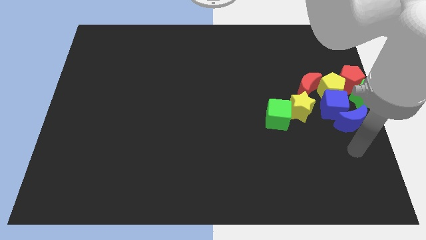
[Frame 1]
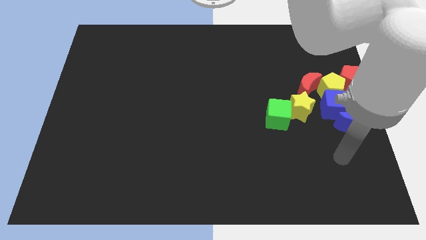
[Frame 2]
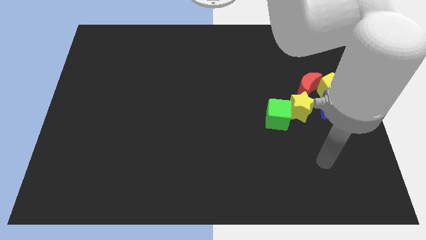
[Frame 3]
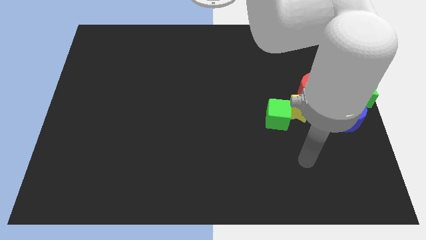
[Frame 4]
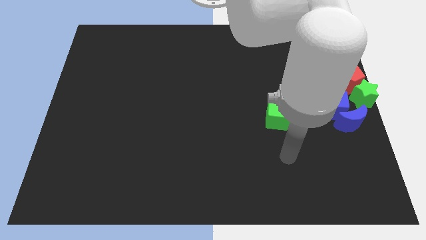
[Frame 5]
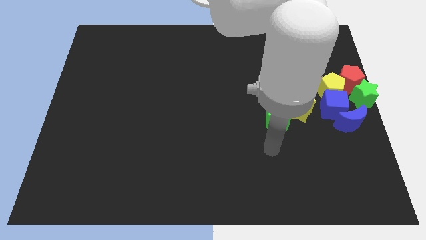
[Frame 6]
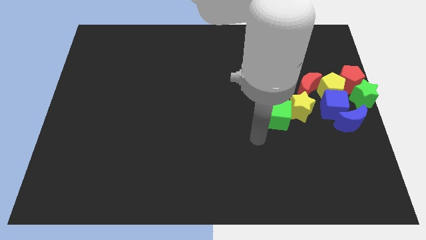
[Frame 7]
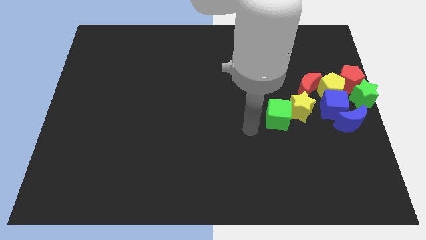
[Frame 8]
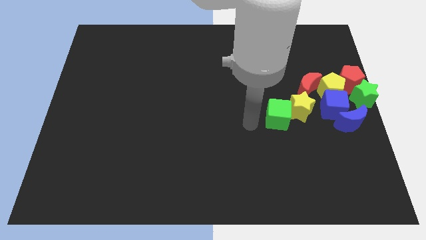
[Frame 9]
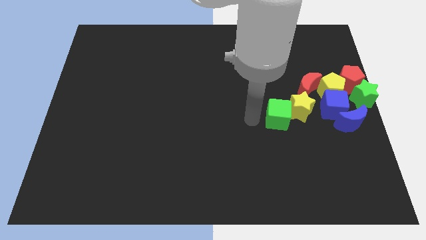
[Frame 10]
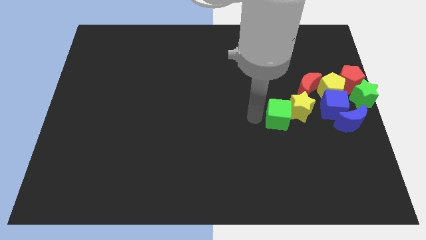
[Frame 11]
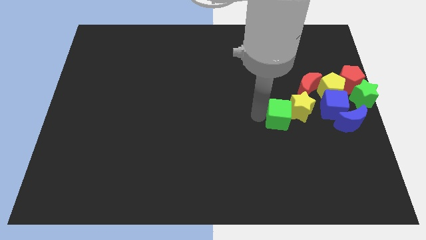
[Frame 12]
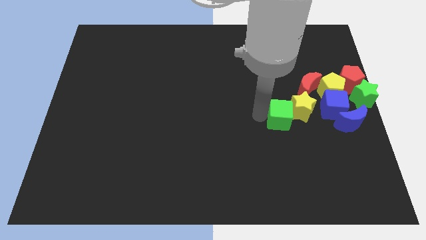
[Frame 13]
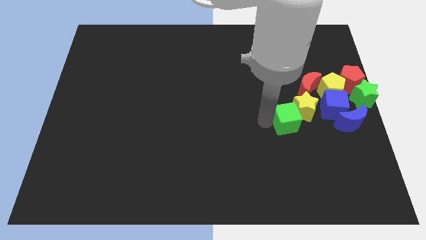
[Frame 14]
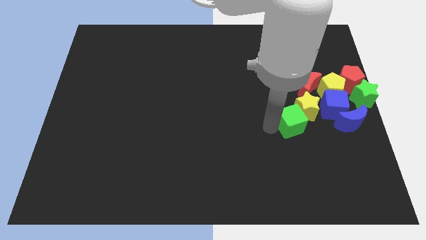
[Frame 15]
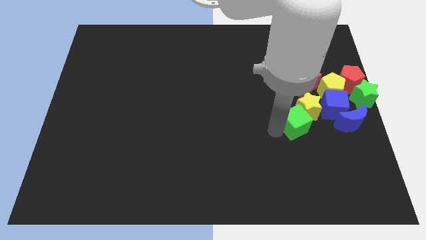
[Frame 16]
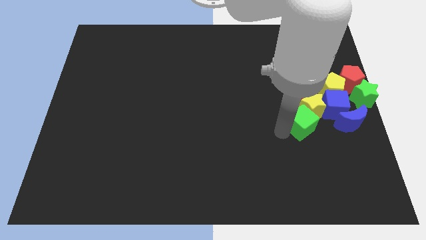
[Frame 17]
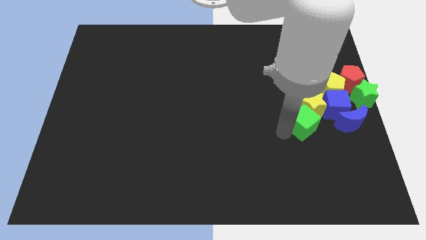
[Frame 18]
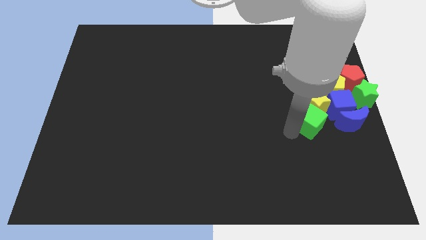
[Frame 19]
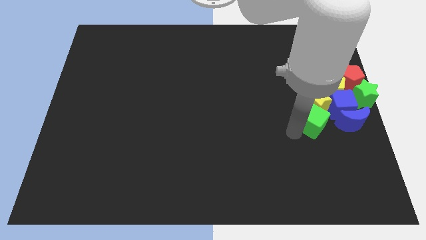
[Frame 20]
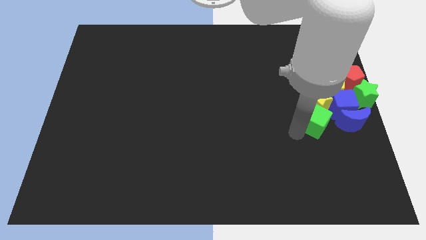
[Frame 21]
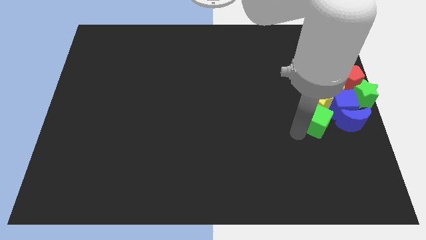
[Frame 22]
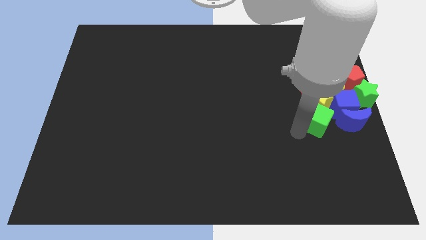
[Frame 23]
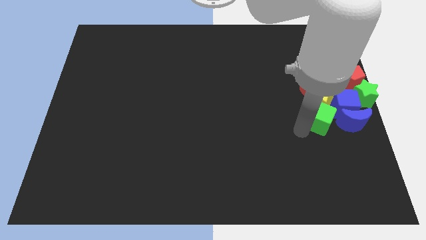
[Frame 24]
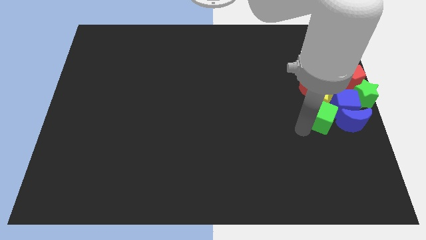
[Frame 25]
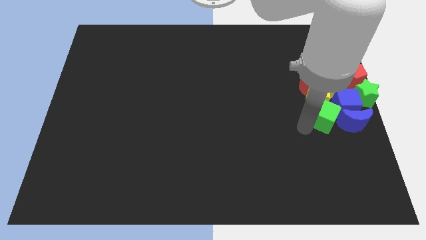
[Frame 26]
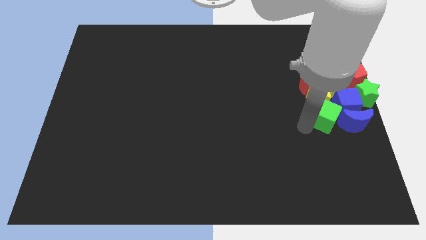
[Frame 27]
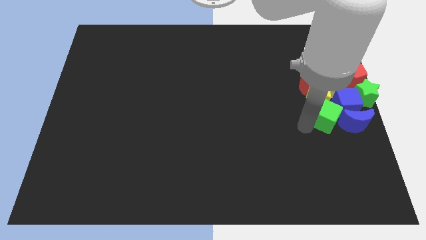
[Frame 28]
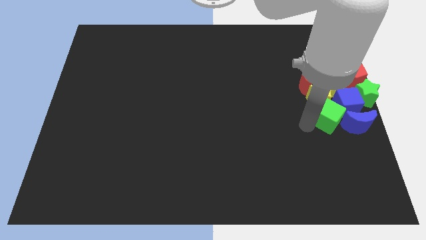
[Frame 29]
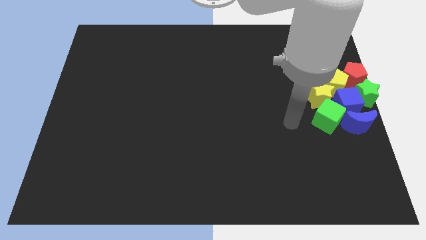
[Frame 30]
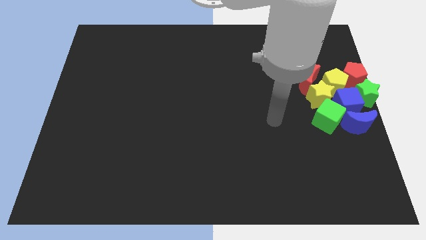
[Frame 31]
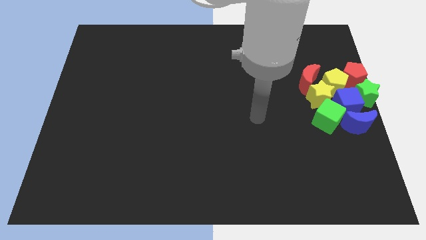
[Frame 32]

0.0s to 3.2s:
push the green cube into the group of blocks

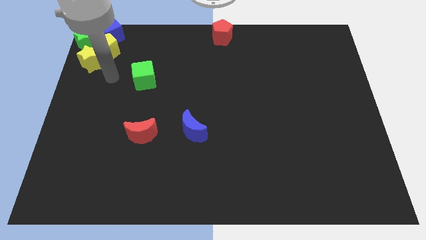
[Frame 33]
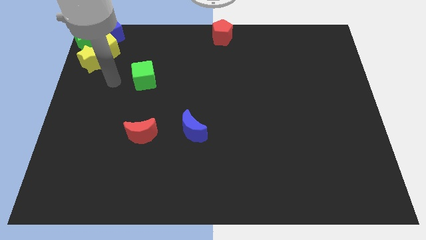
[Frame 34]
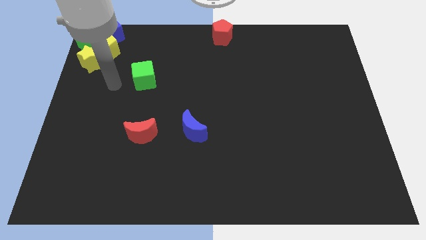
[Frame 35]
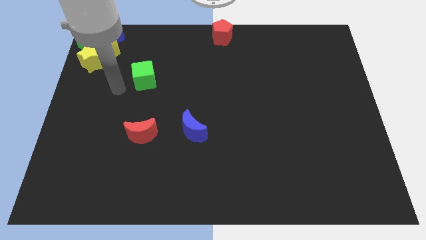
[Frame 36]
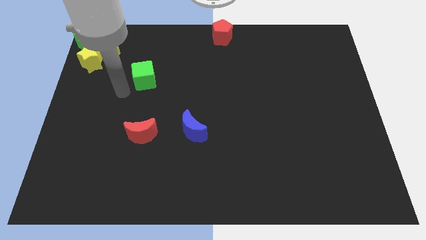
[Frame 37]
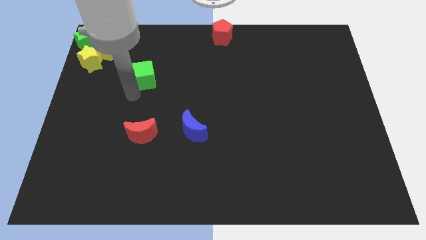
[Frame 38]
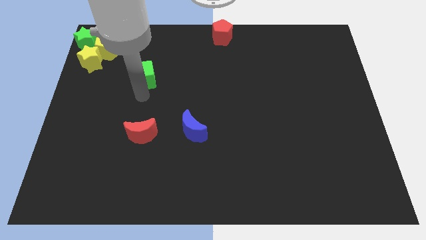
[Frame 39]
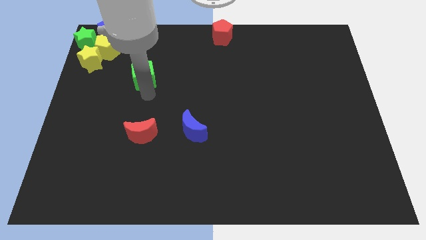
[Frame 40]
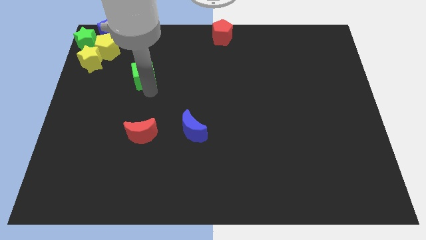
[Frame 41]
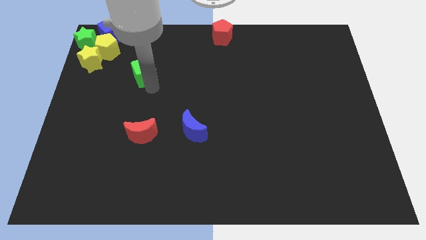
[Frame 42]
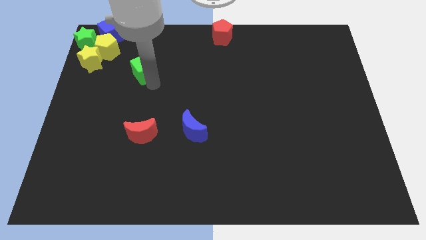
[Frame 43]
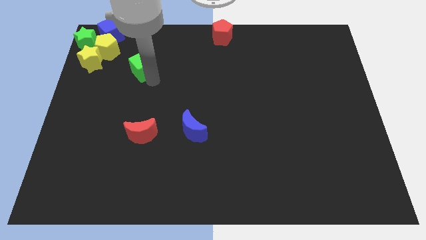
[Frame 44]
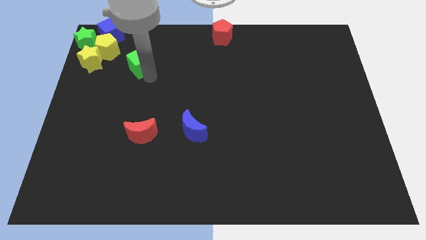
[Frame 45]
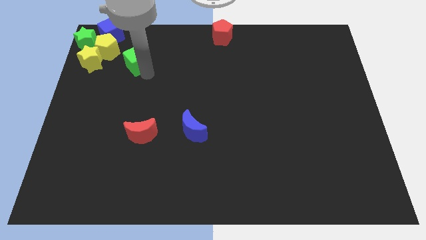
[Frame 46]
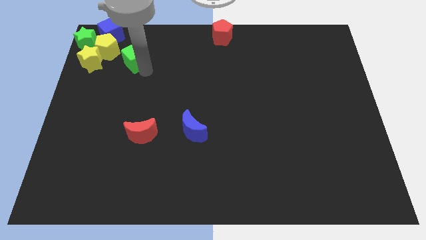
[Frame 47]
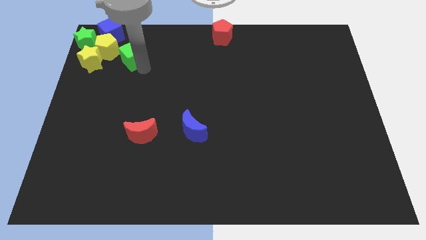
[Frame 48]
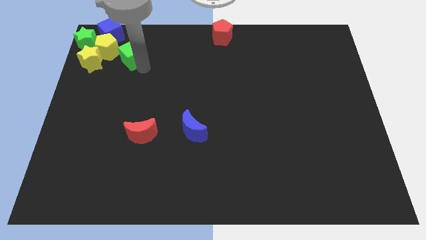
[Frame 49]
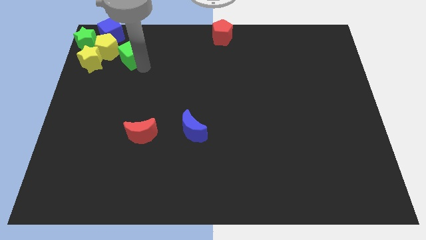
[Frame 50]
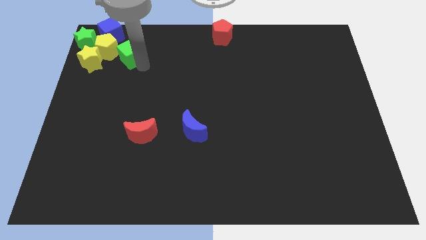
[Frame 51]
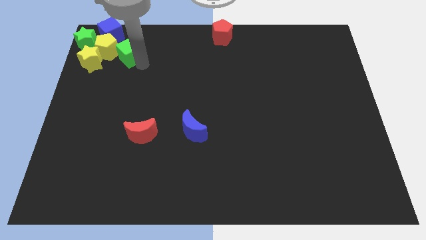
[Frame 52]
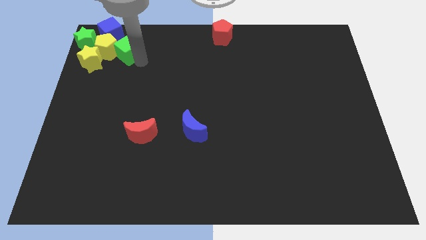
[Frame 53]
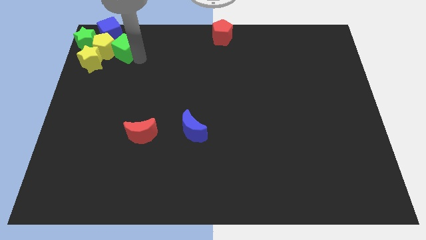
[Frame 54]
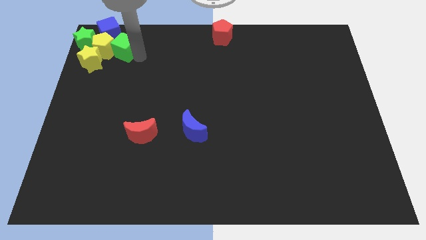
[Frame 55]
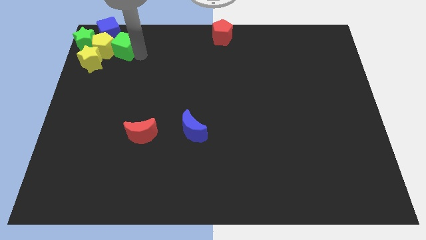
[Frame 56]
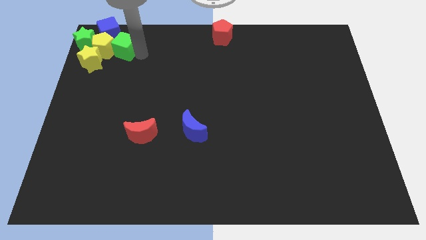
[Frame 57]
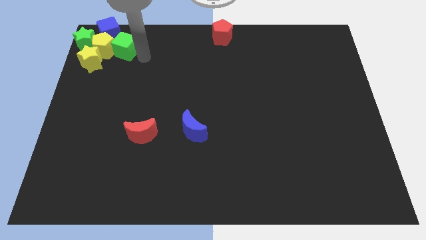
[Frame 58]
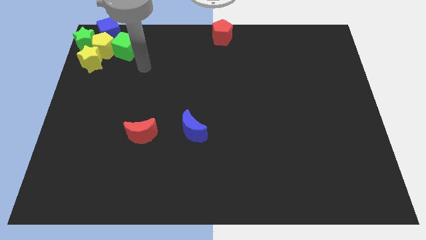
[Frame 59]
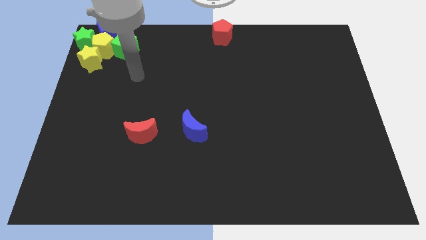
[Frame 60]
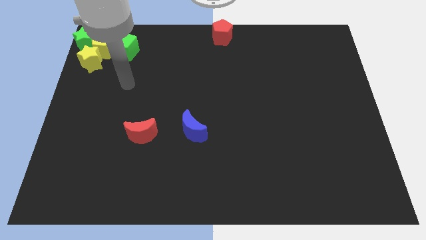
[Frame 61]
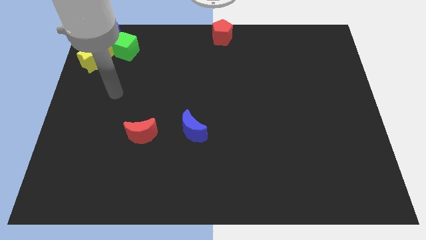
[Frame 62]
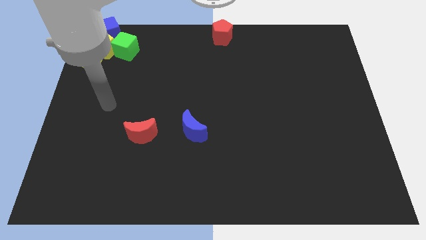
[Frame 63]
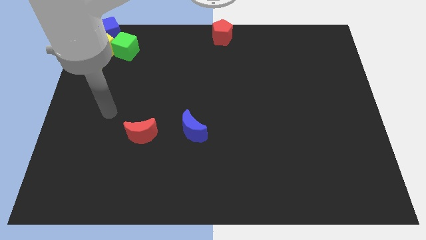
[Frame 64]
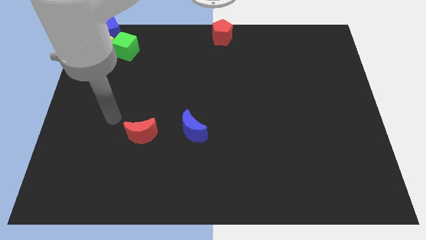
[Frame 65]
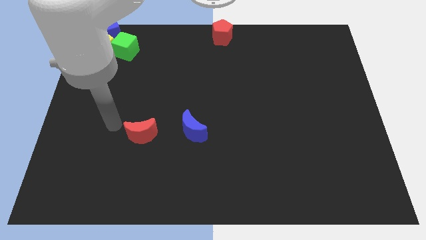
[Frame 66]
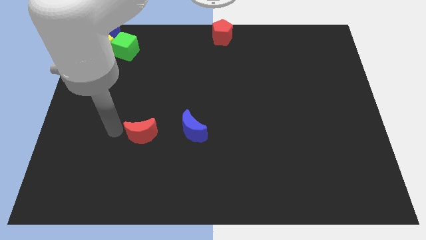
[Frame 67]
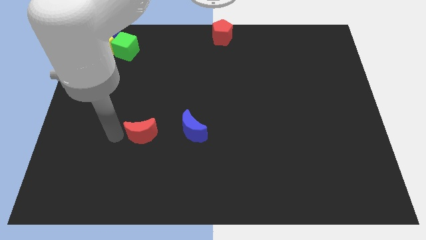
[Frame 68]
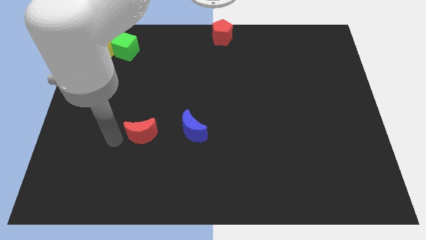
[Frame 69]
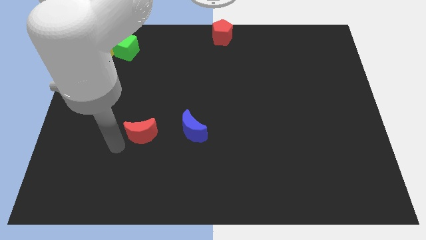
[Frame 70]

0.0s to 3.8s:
move green cube to the right of the yellow pentagon

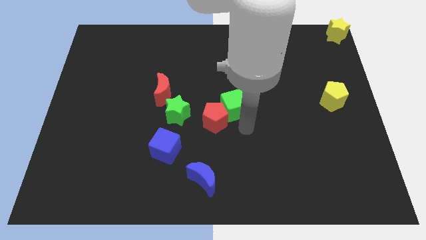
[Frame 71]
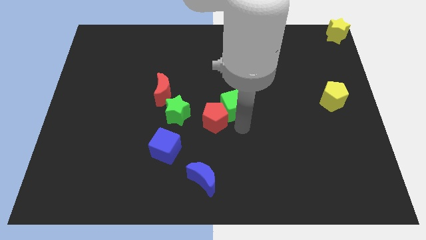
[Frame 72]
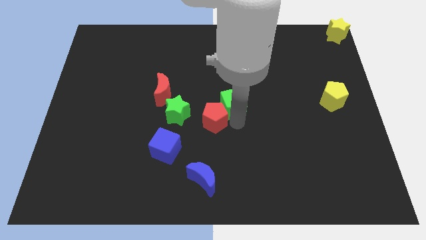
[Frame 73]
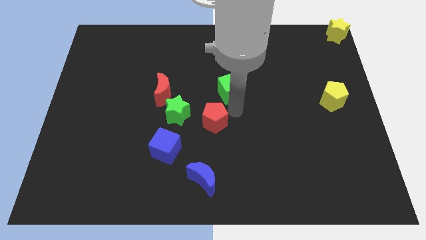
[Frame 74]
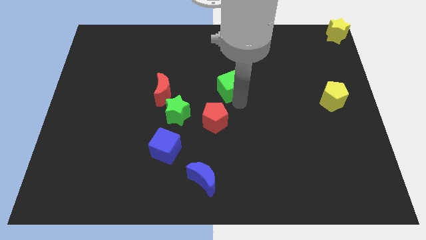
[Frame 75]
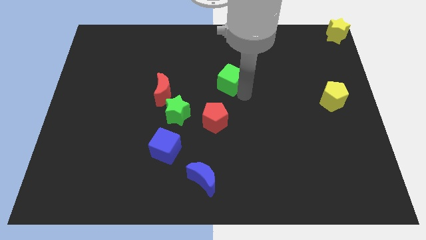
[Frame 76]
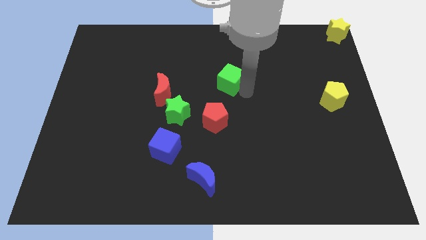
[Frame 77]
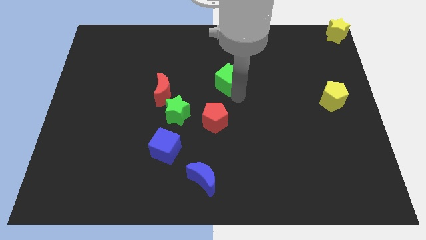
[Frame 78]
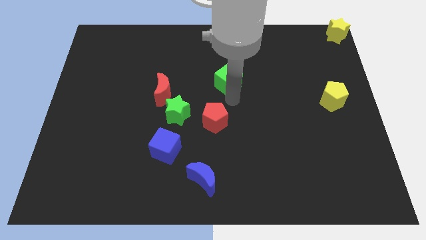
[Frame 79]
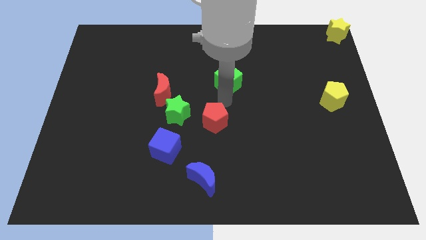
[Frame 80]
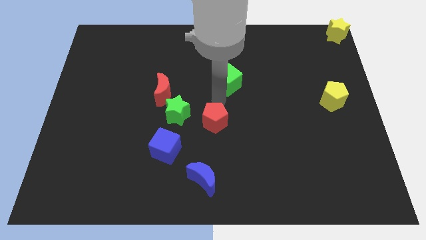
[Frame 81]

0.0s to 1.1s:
place the green cube right to the red moon

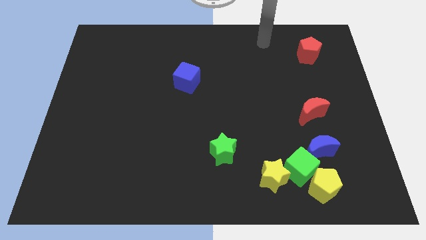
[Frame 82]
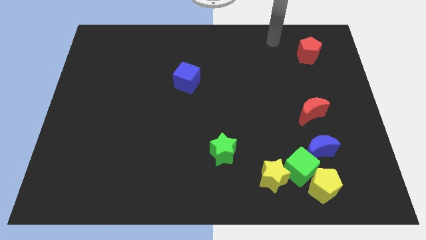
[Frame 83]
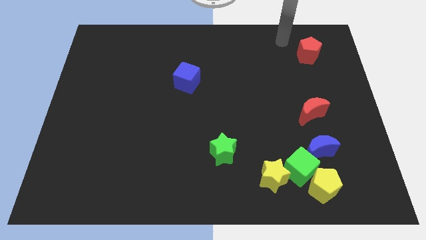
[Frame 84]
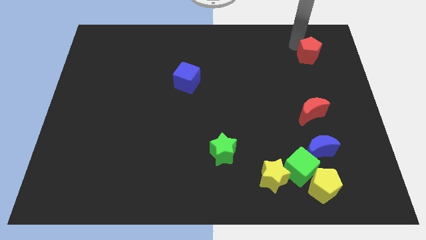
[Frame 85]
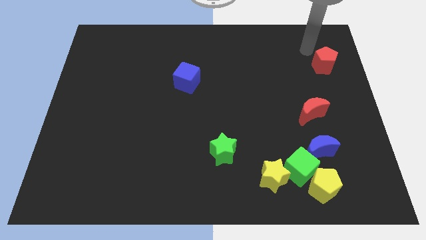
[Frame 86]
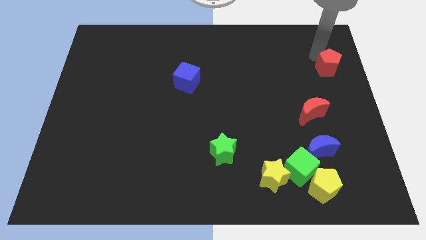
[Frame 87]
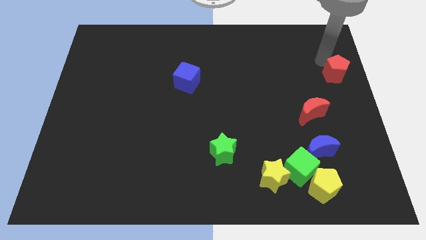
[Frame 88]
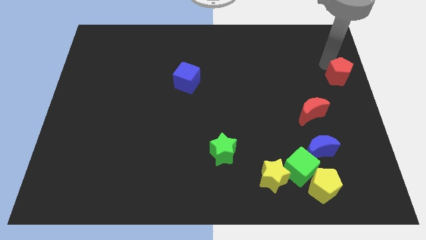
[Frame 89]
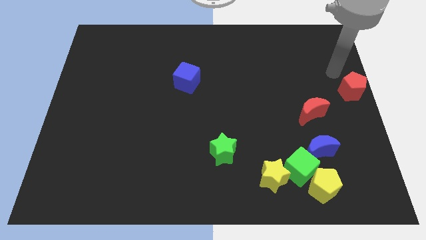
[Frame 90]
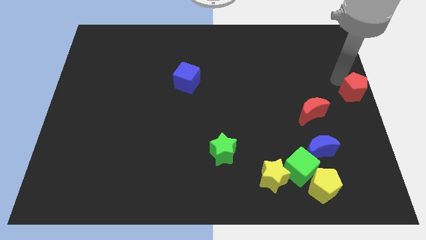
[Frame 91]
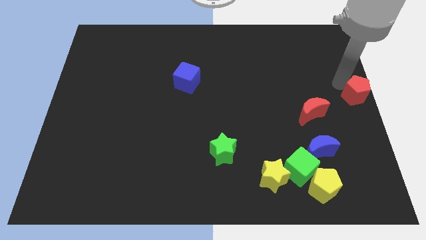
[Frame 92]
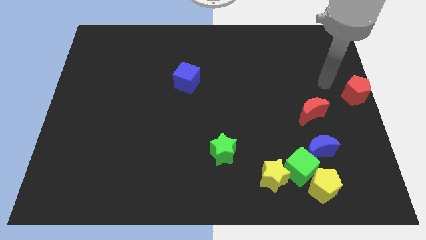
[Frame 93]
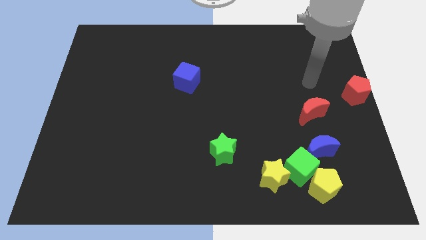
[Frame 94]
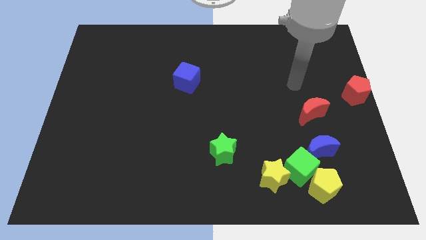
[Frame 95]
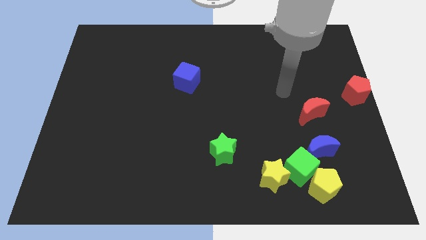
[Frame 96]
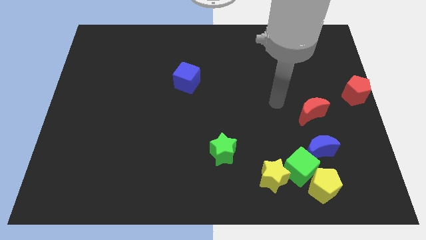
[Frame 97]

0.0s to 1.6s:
place the red pentagon at the center right side of the board
